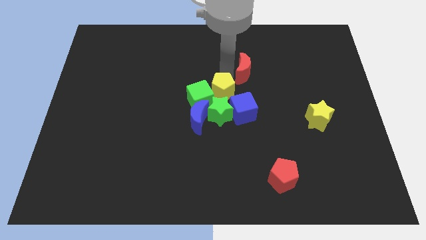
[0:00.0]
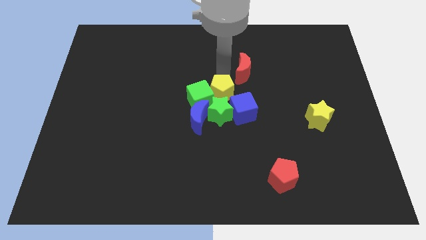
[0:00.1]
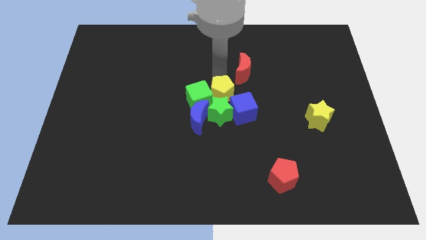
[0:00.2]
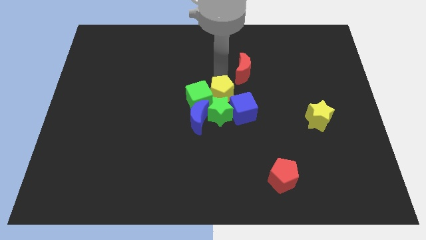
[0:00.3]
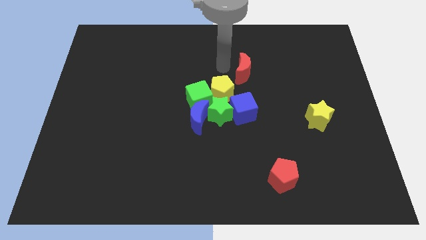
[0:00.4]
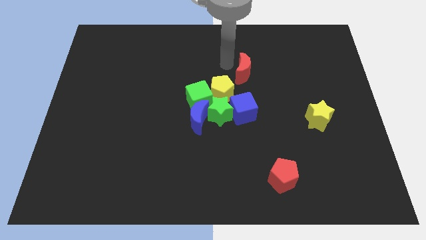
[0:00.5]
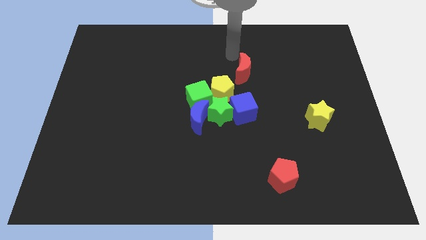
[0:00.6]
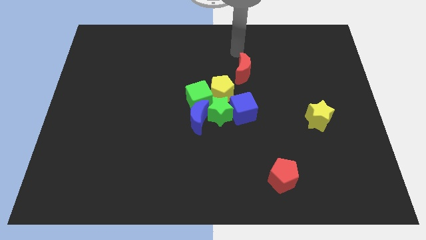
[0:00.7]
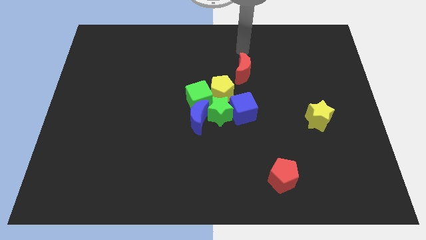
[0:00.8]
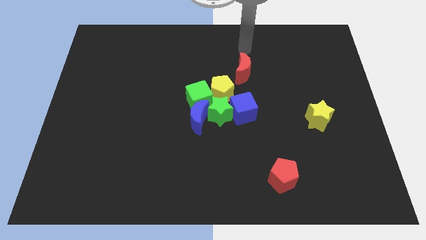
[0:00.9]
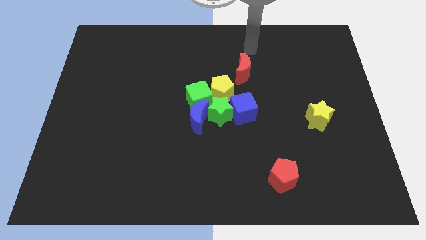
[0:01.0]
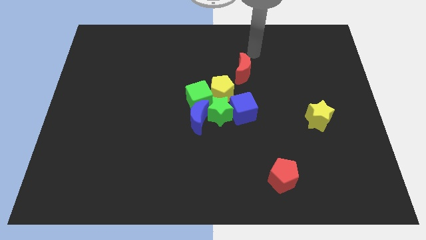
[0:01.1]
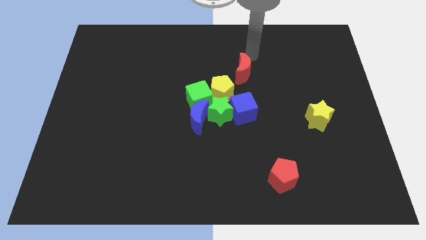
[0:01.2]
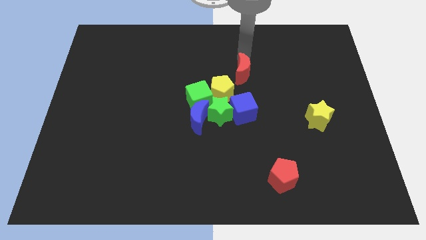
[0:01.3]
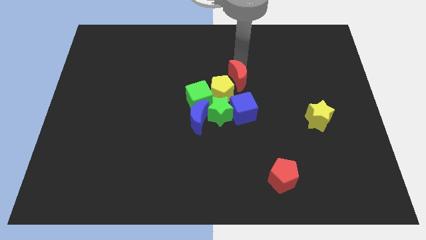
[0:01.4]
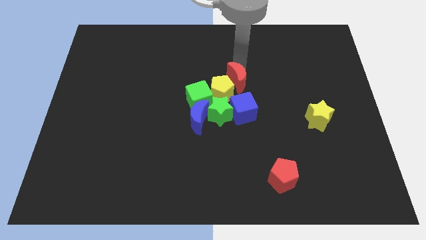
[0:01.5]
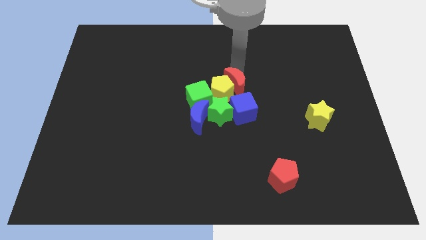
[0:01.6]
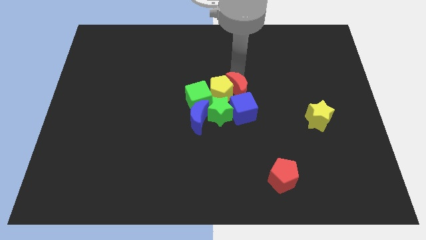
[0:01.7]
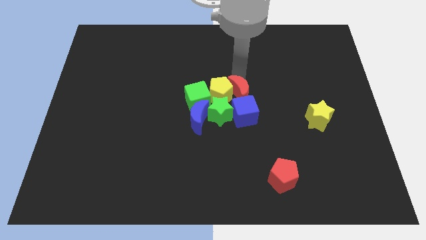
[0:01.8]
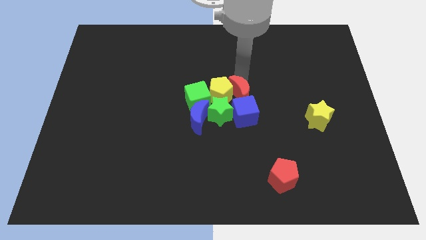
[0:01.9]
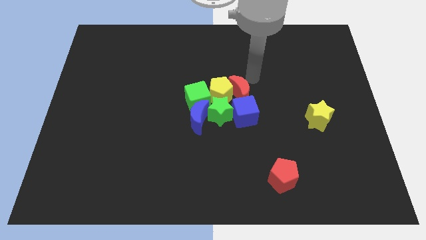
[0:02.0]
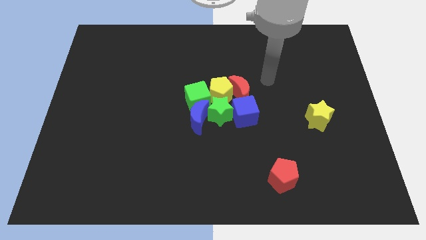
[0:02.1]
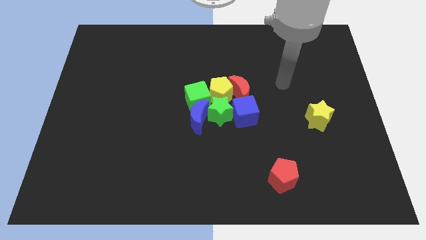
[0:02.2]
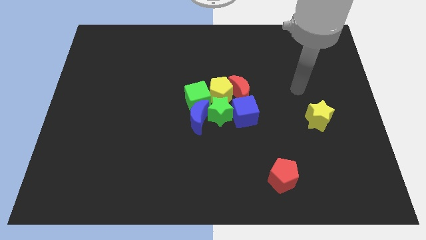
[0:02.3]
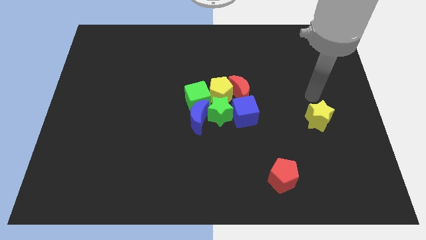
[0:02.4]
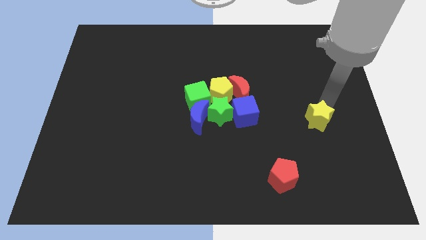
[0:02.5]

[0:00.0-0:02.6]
push the red moon towards the group of blocks at the center of the board

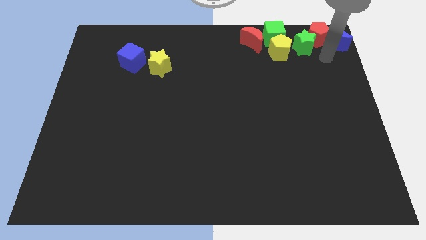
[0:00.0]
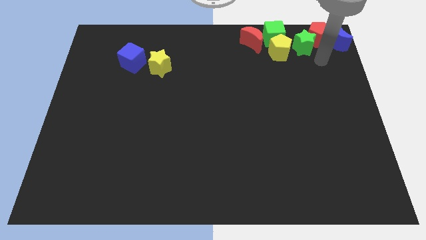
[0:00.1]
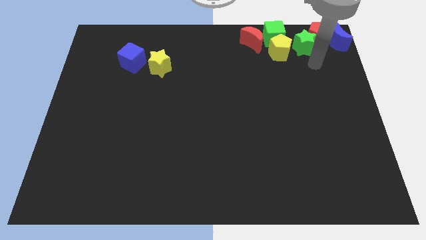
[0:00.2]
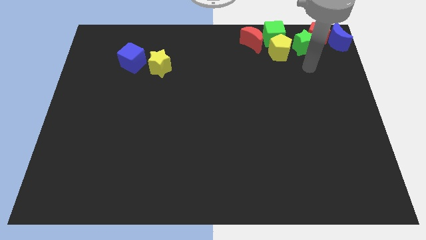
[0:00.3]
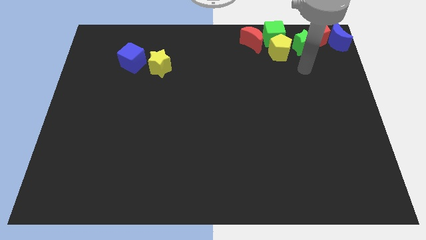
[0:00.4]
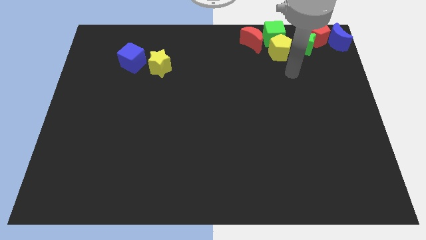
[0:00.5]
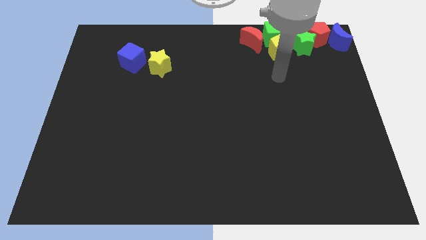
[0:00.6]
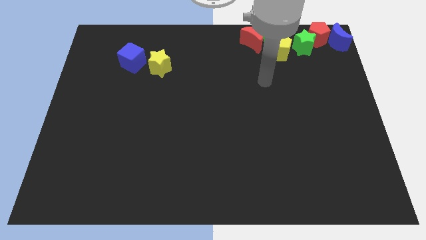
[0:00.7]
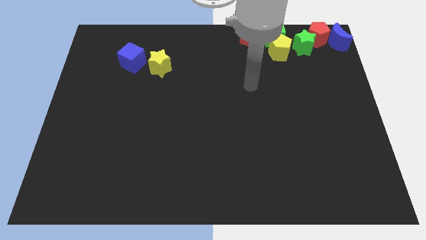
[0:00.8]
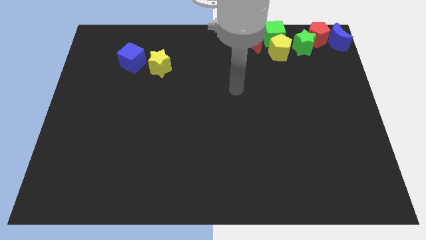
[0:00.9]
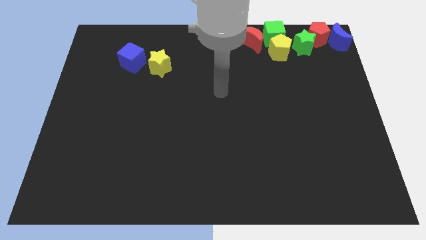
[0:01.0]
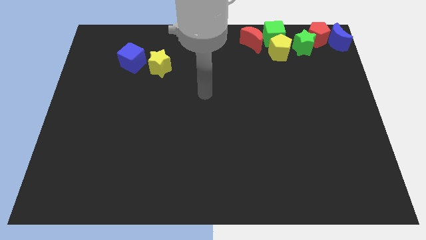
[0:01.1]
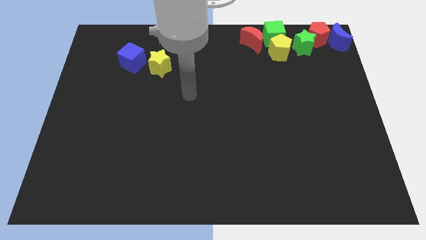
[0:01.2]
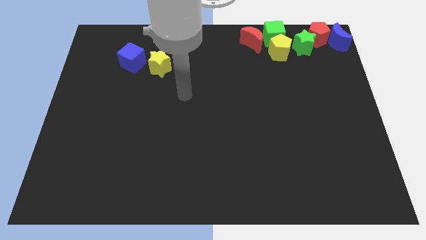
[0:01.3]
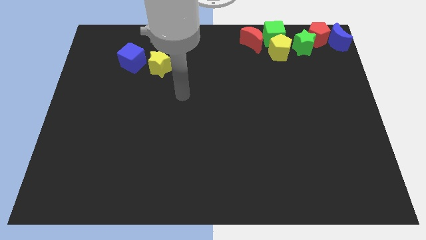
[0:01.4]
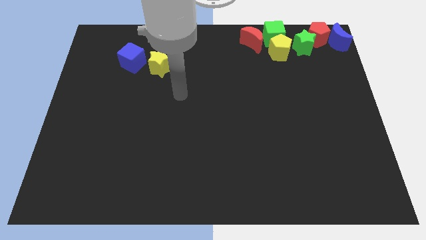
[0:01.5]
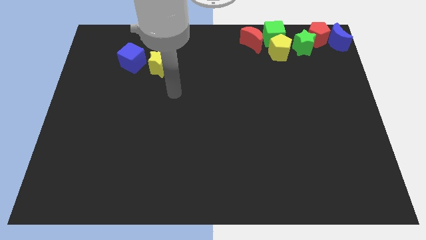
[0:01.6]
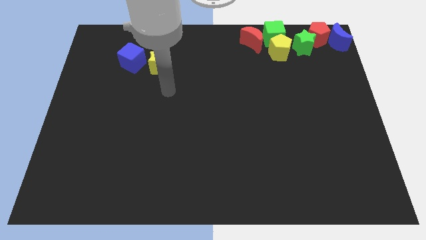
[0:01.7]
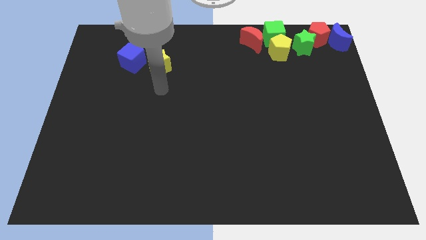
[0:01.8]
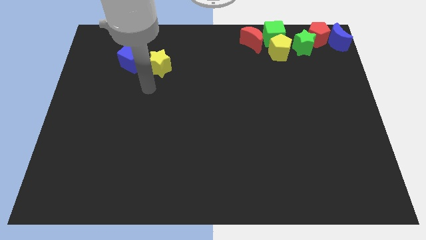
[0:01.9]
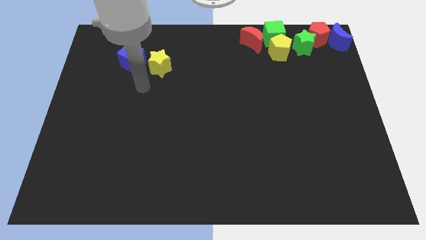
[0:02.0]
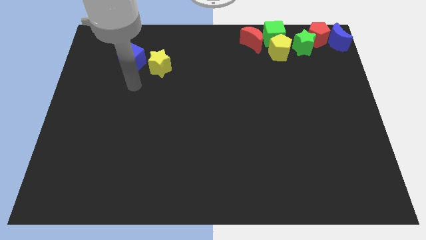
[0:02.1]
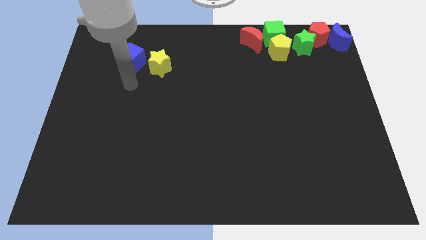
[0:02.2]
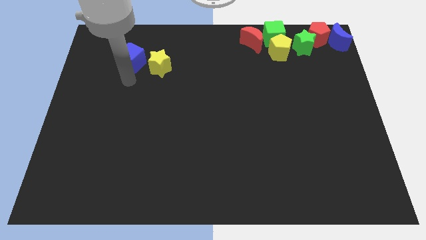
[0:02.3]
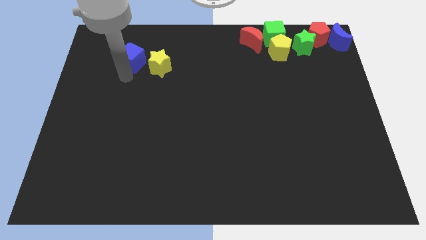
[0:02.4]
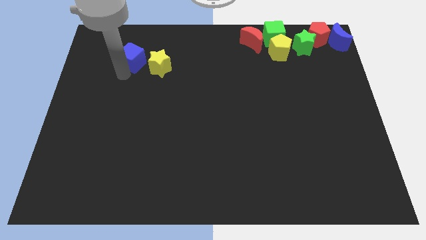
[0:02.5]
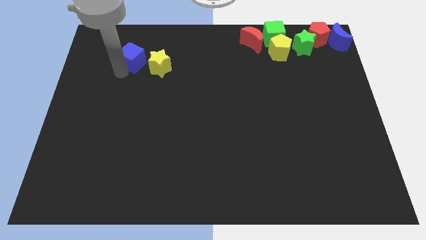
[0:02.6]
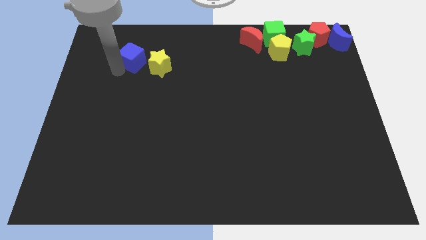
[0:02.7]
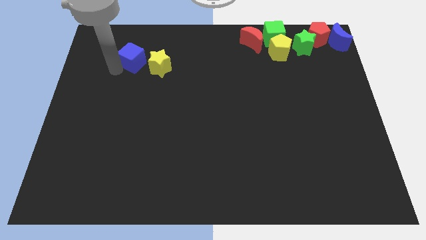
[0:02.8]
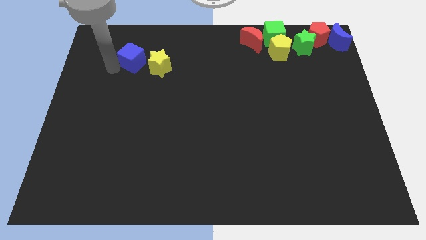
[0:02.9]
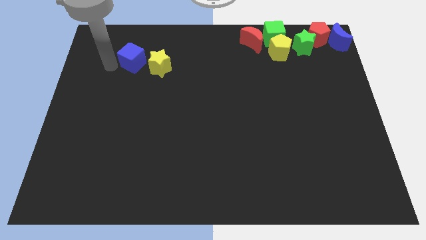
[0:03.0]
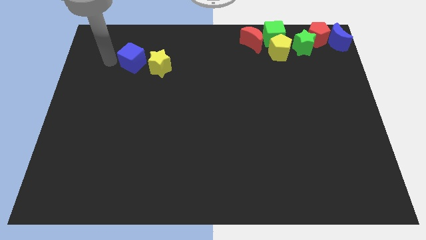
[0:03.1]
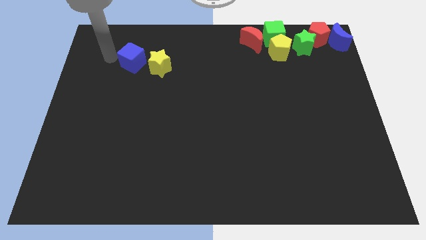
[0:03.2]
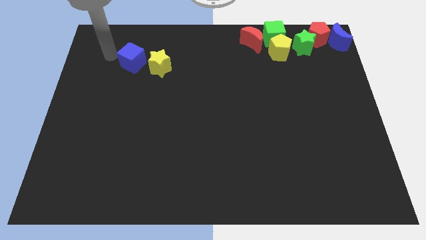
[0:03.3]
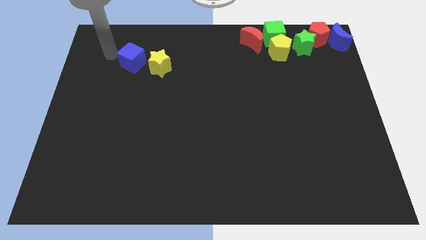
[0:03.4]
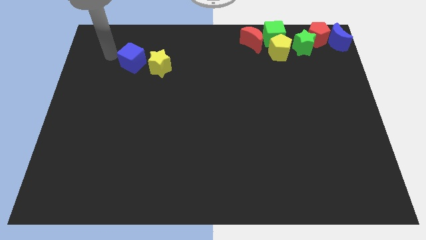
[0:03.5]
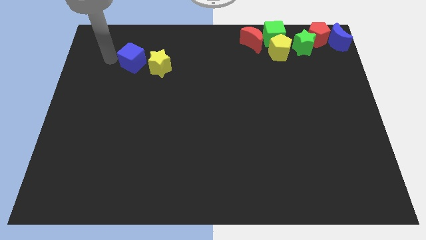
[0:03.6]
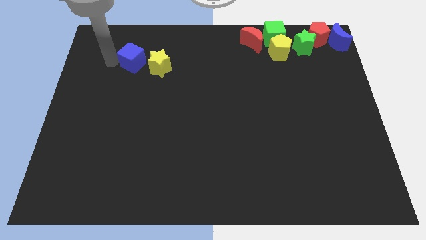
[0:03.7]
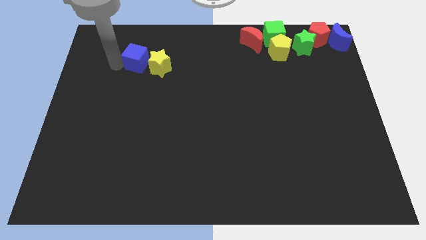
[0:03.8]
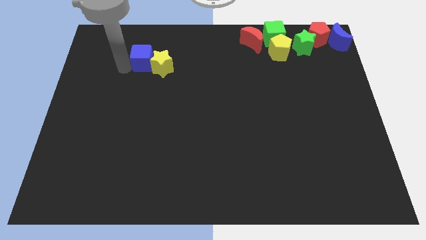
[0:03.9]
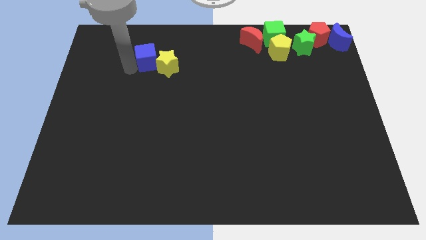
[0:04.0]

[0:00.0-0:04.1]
move the blue cube into the yellow star

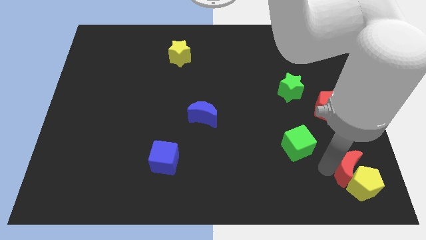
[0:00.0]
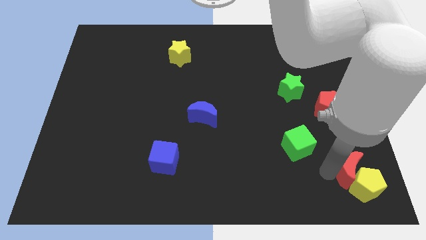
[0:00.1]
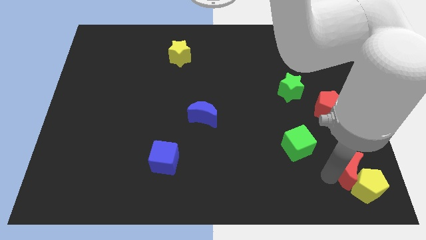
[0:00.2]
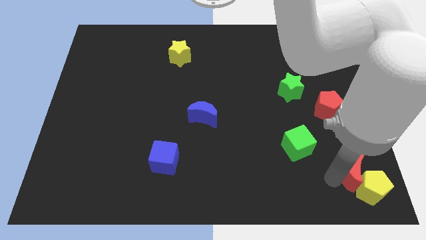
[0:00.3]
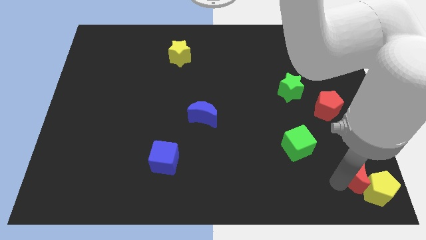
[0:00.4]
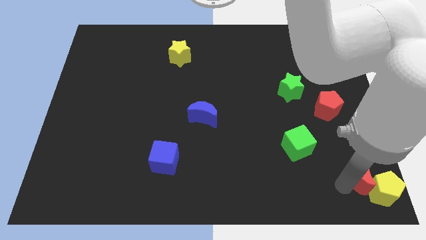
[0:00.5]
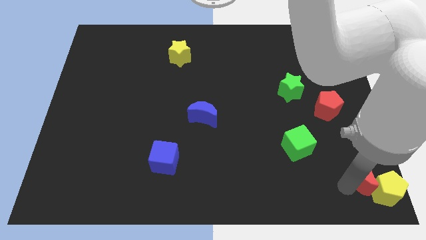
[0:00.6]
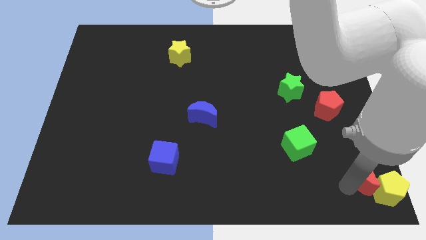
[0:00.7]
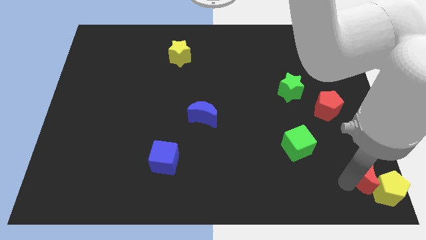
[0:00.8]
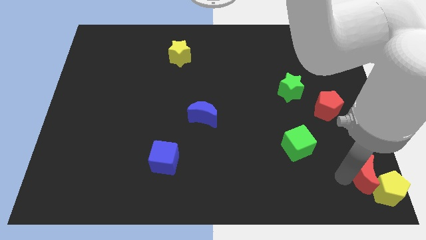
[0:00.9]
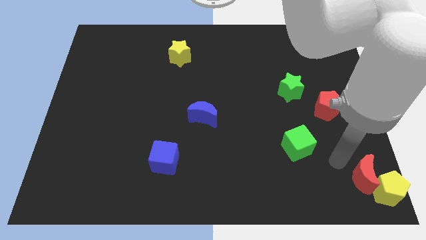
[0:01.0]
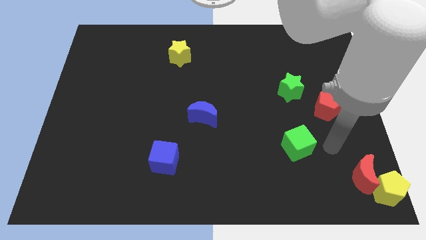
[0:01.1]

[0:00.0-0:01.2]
push the red crescent into the yellow pentagon towards the bottom right

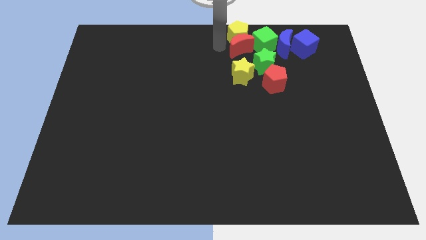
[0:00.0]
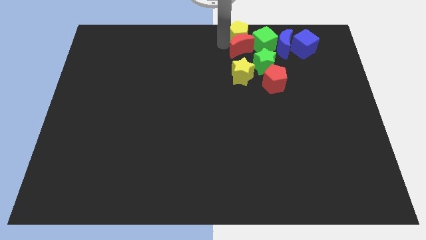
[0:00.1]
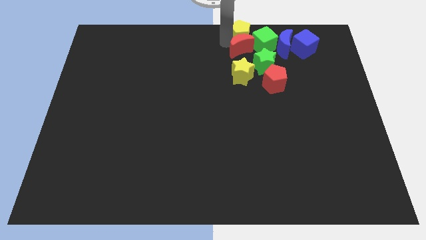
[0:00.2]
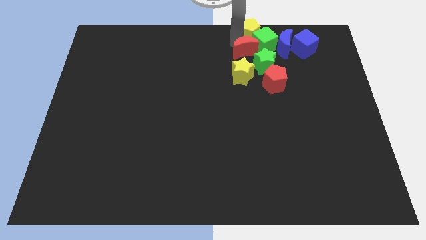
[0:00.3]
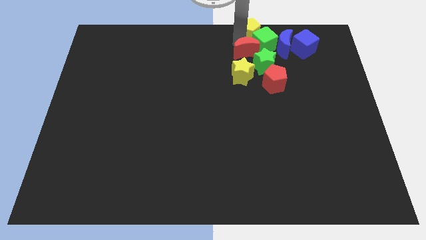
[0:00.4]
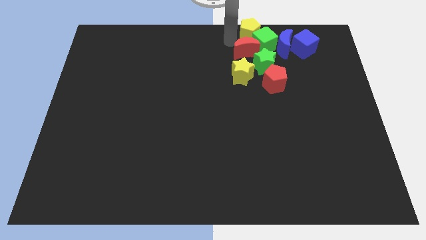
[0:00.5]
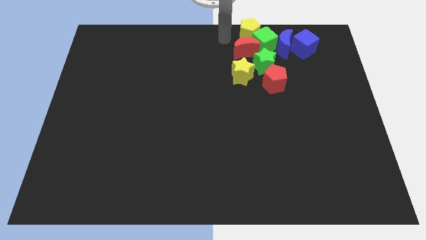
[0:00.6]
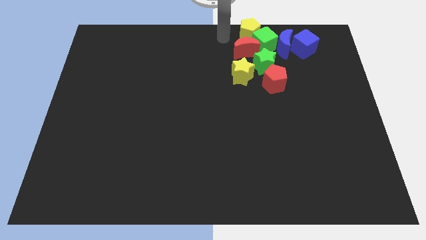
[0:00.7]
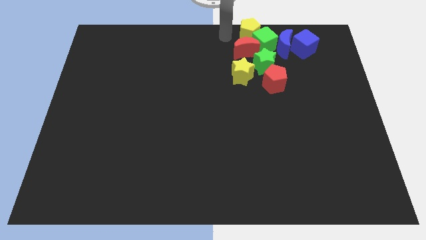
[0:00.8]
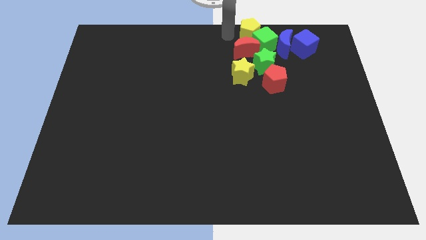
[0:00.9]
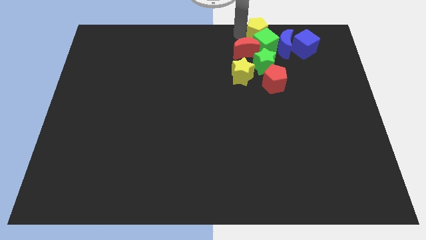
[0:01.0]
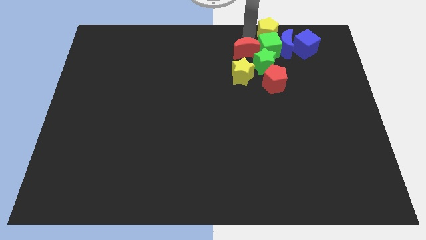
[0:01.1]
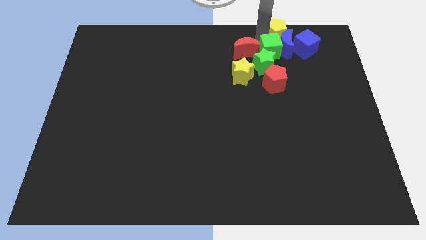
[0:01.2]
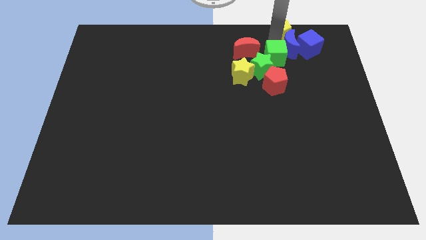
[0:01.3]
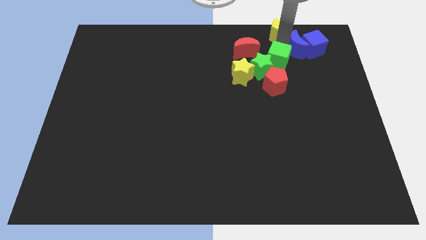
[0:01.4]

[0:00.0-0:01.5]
push the yellow pentagon above the blue crescent
